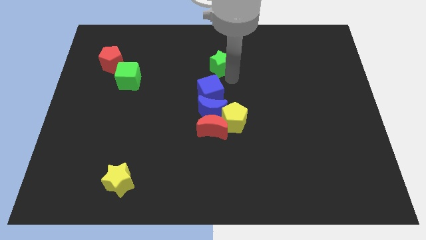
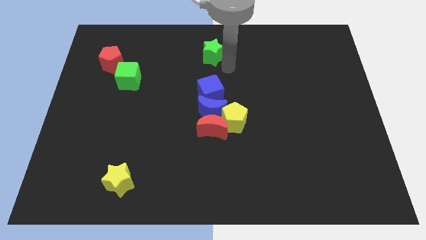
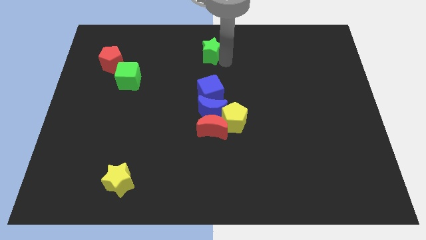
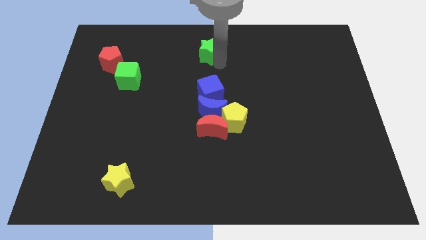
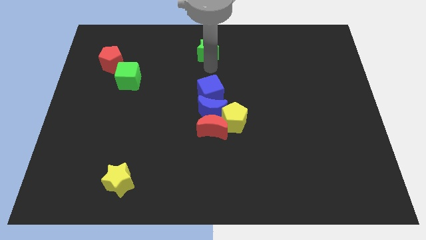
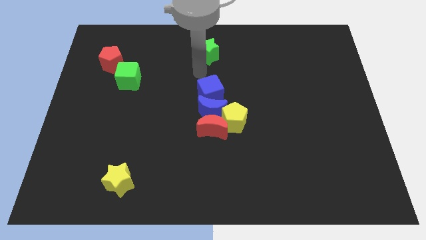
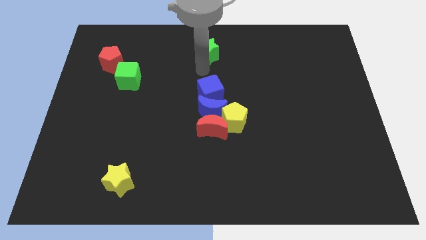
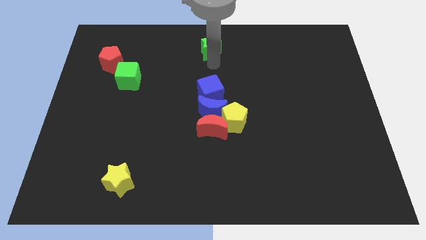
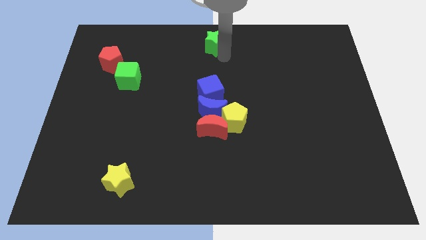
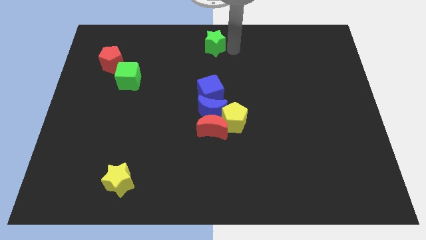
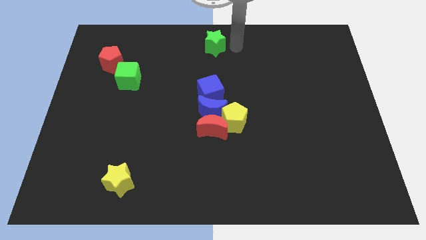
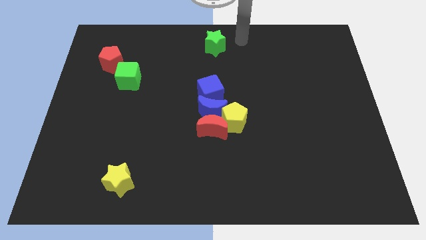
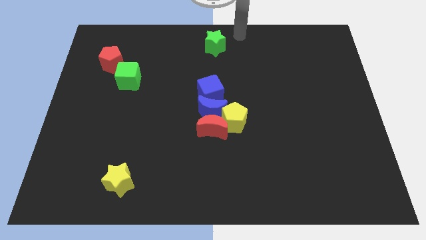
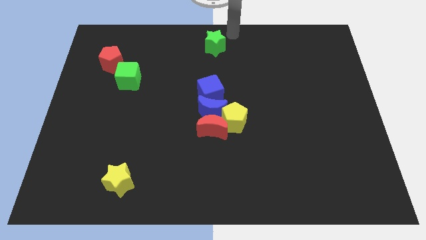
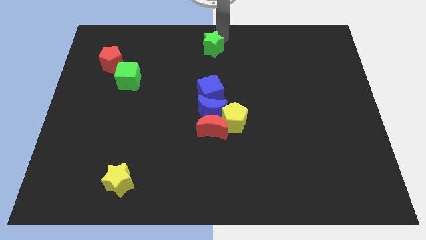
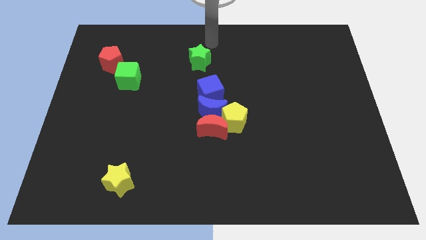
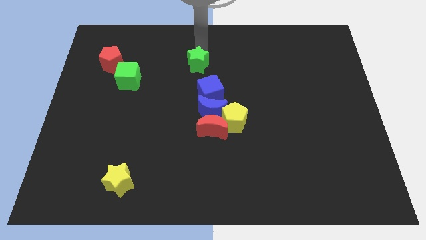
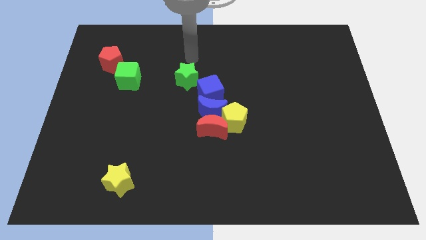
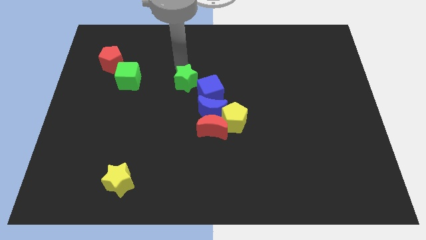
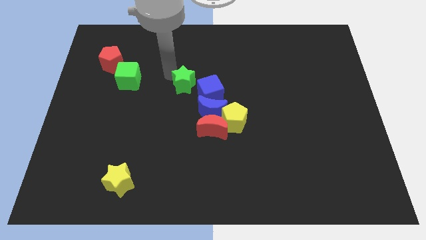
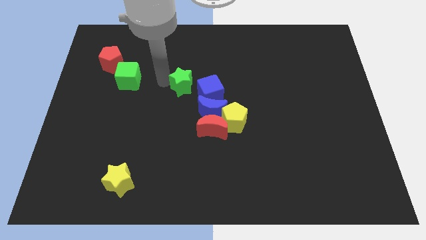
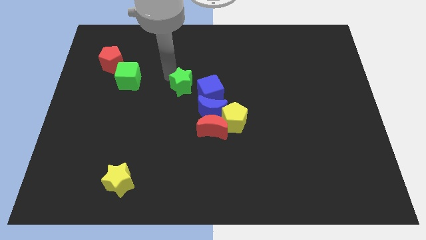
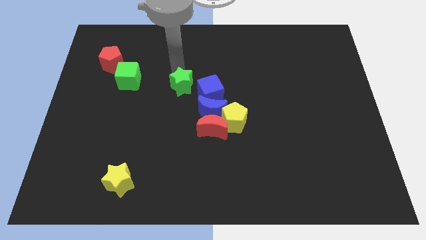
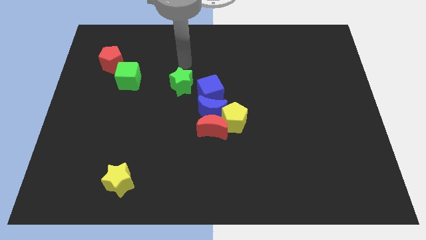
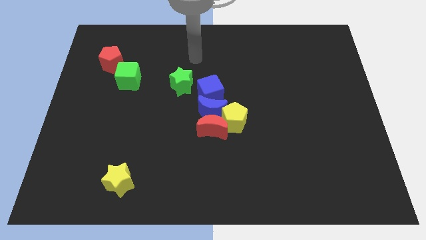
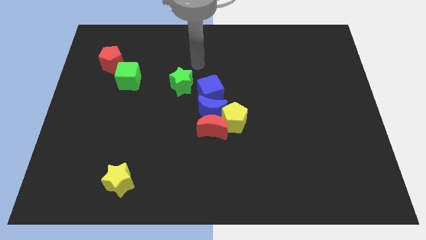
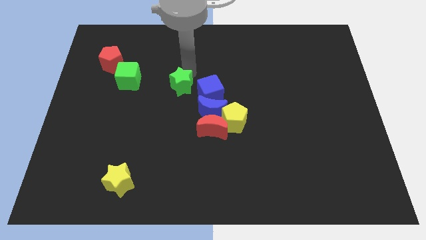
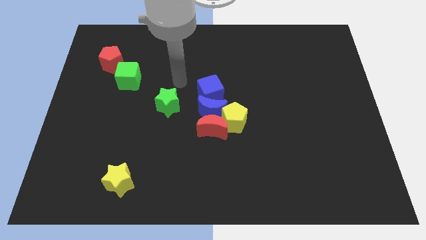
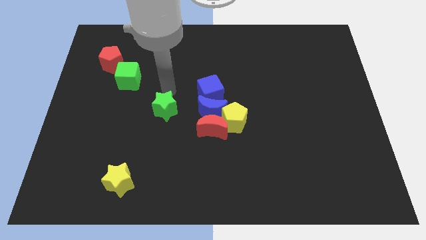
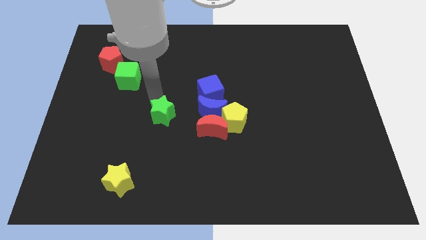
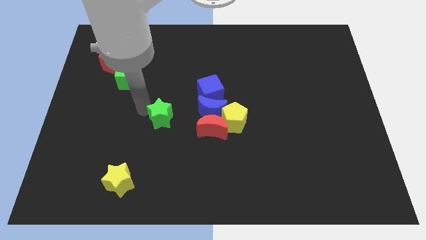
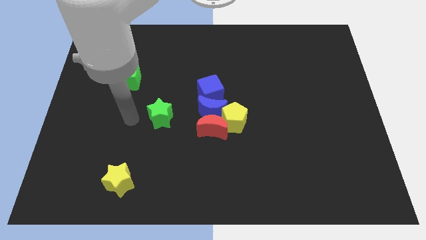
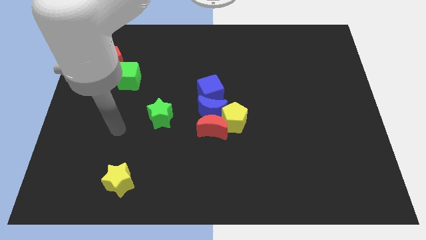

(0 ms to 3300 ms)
move the green star to the left of red and blue moons

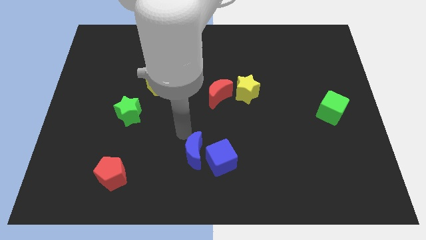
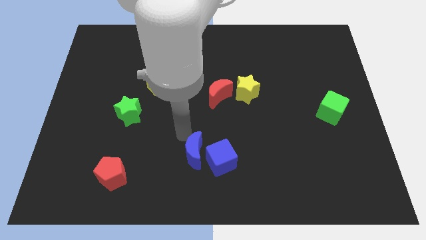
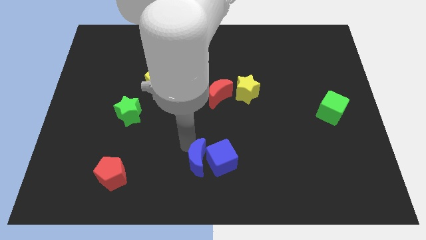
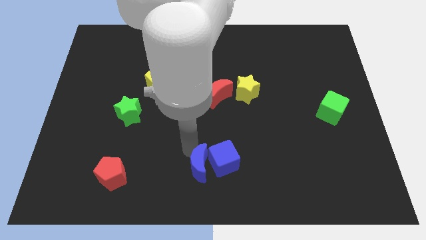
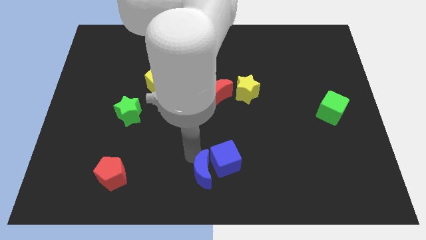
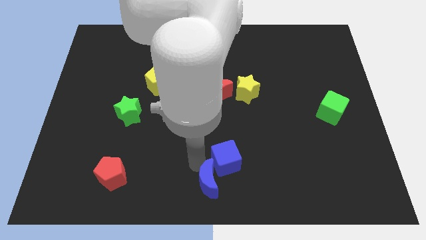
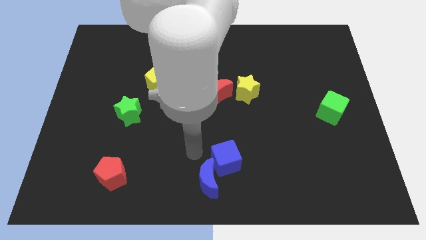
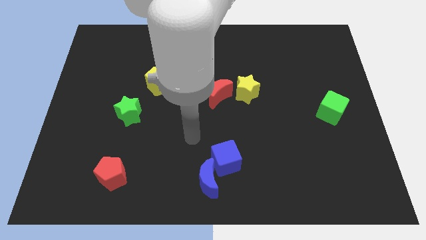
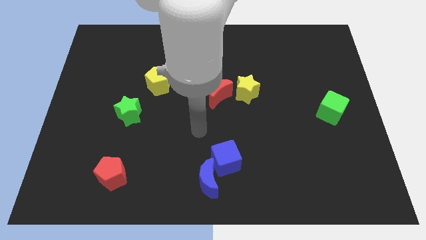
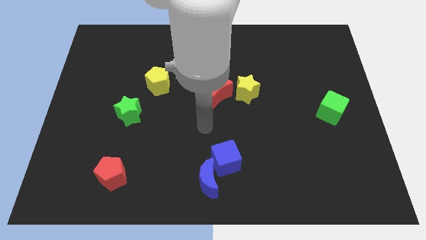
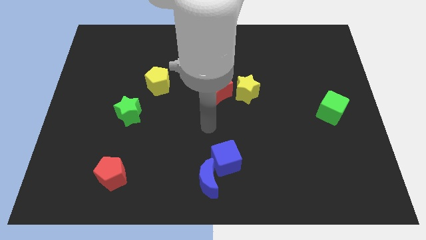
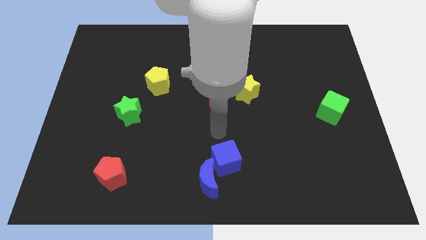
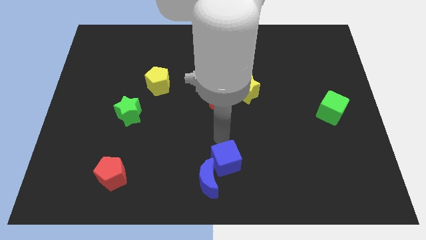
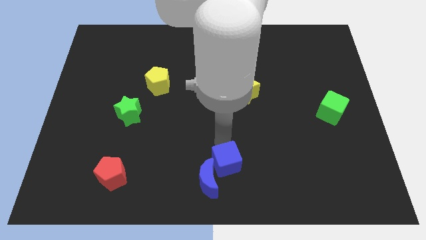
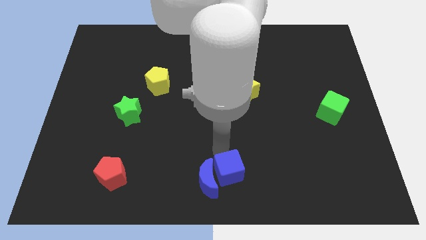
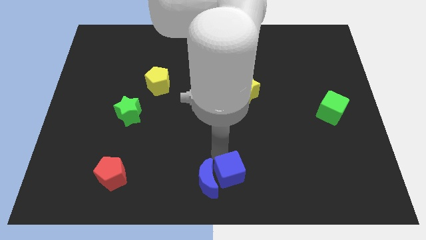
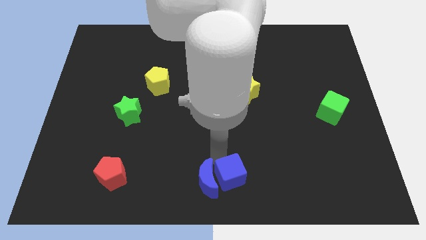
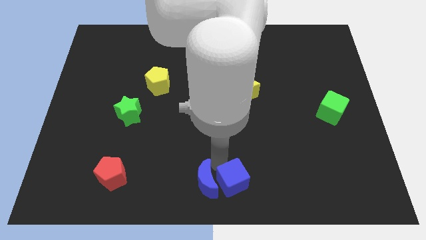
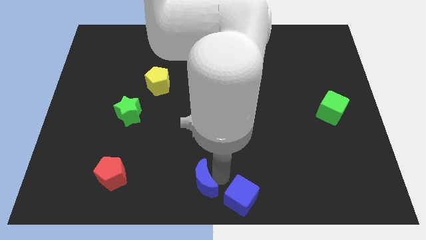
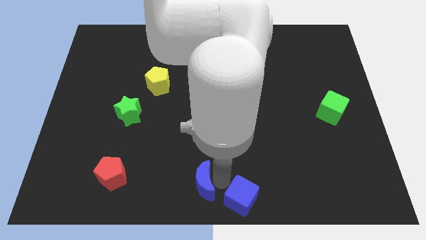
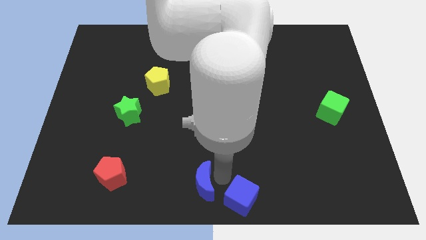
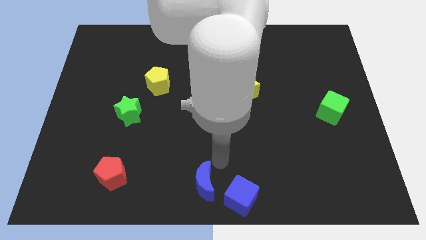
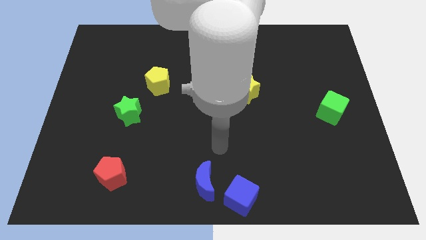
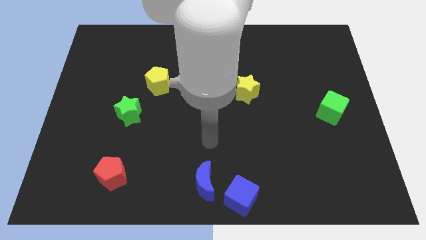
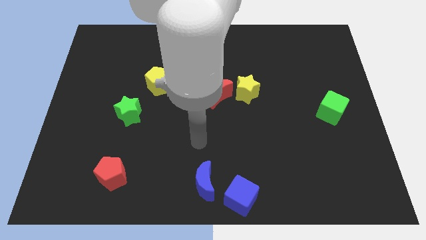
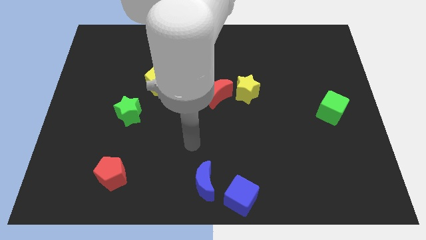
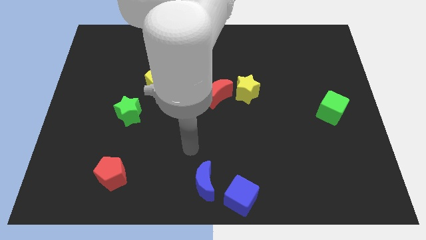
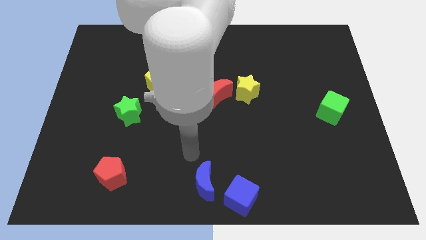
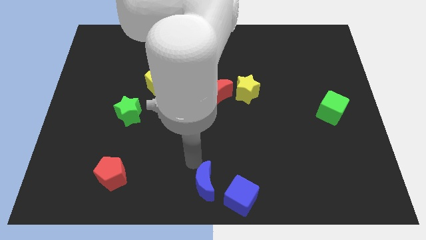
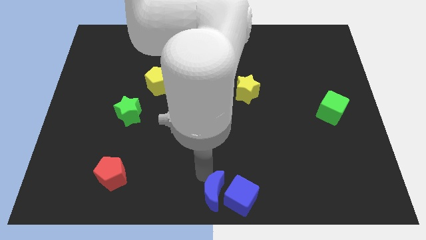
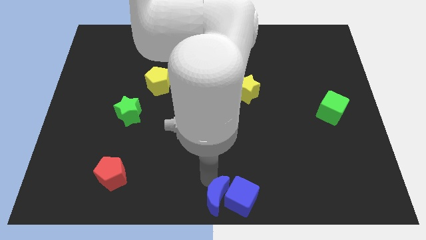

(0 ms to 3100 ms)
push blue blocks together to the bottom center

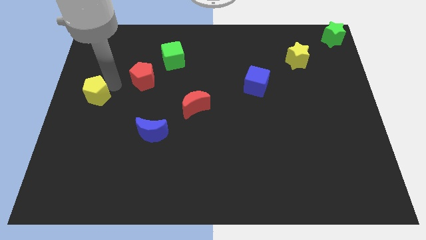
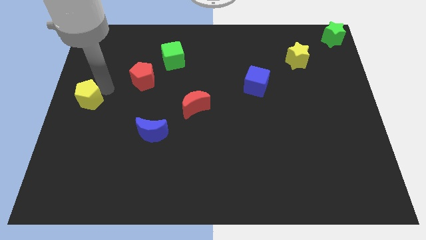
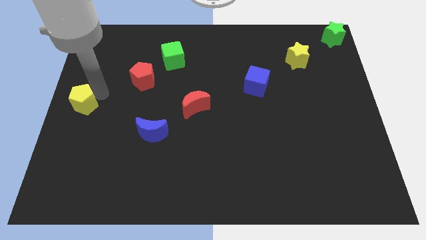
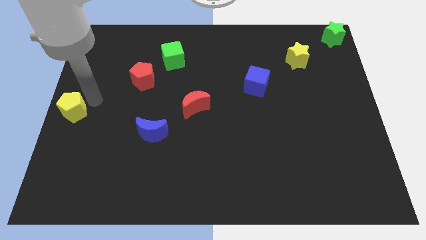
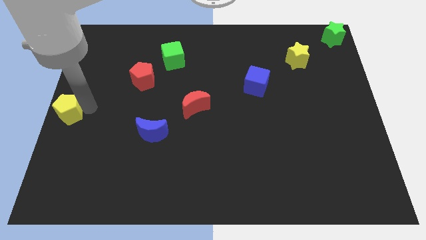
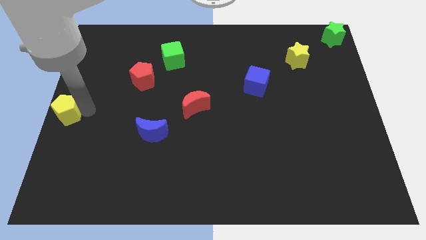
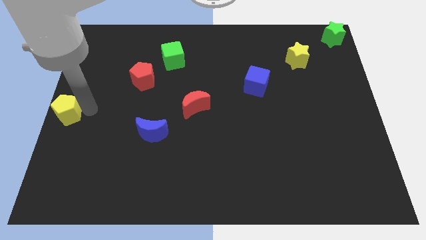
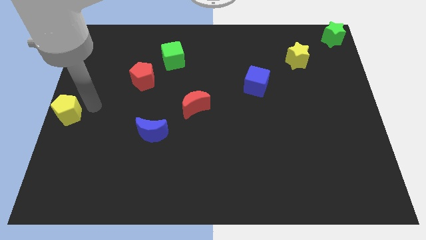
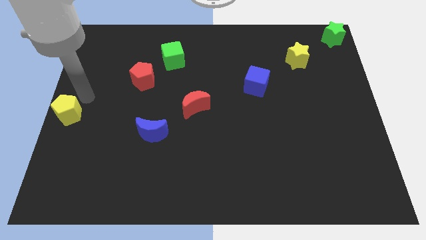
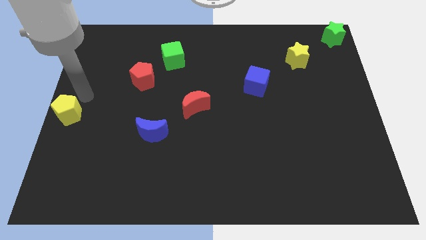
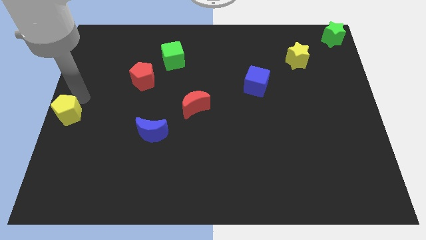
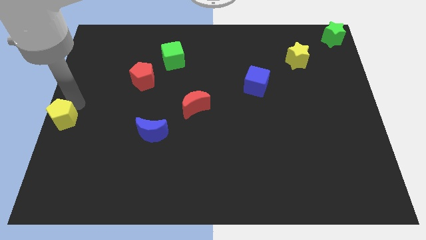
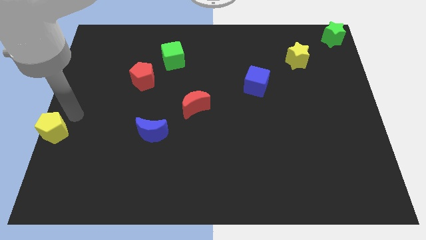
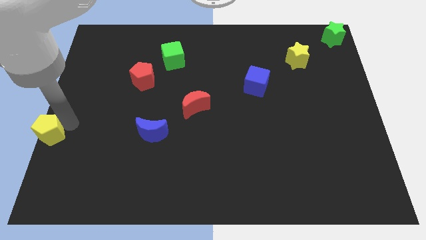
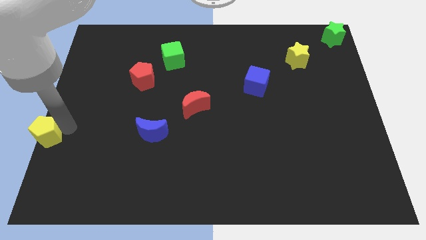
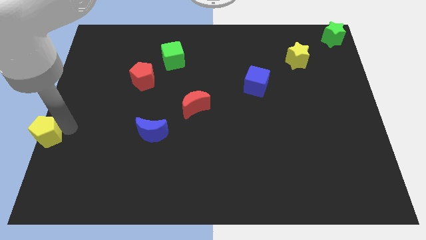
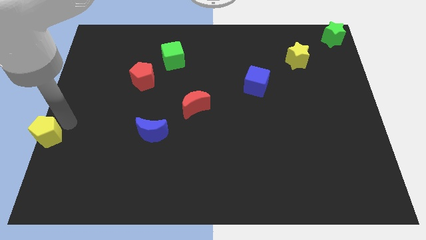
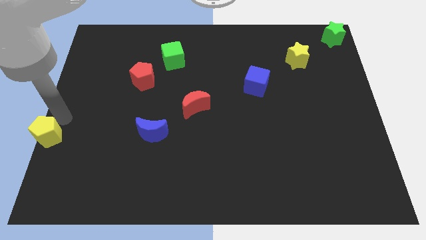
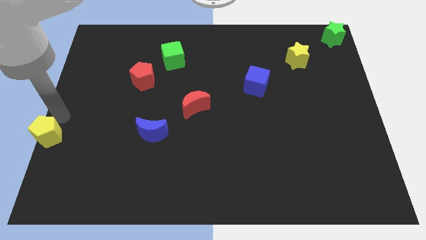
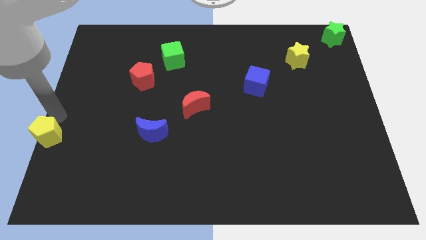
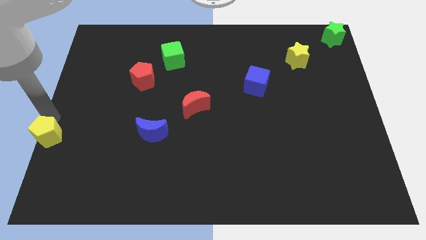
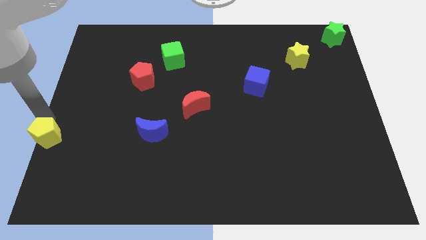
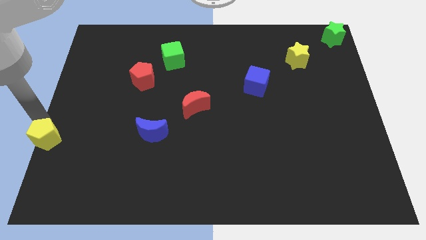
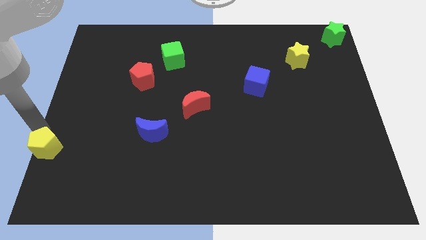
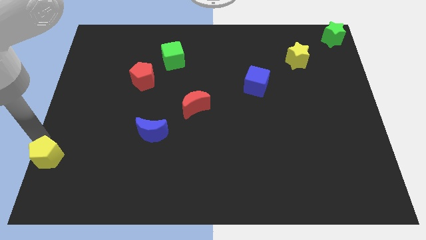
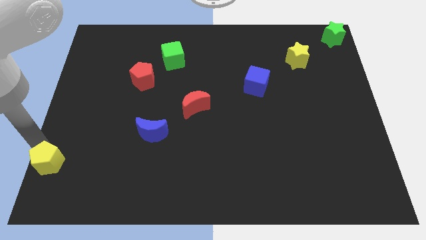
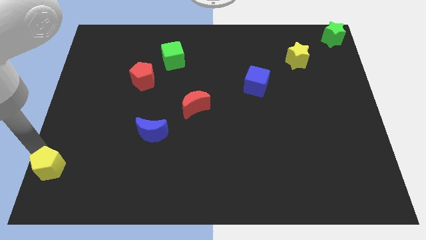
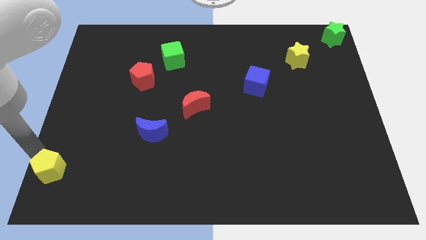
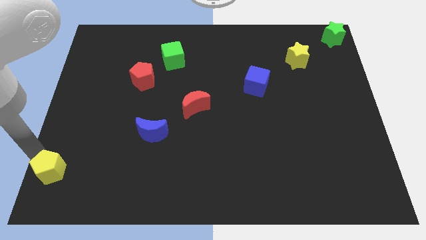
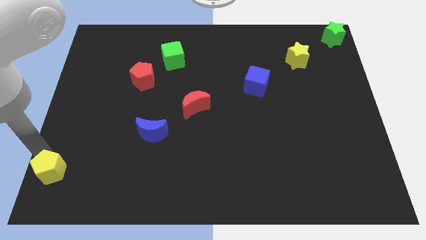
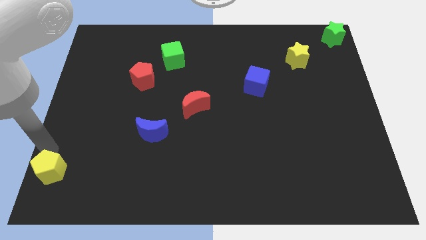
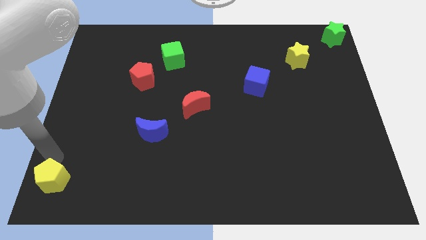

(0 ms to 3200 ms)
drag the yellow pentagon towards the bottom left corner
